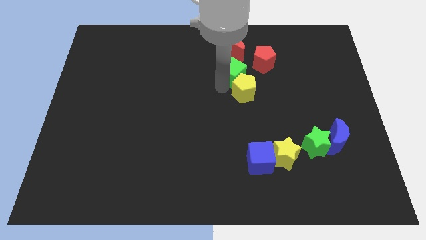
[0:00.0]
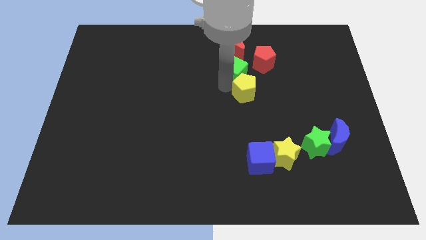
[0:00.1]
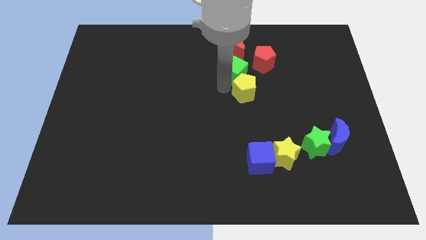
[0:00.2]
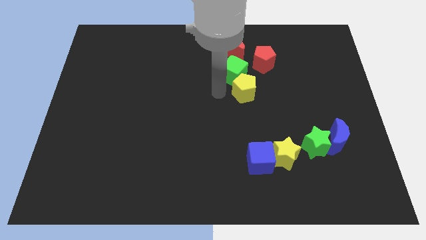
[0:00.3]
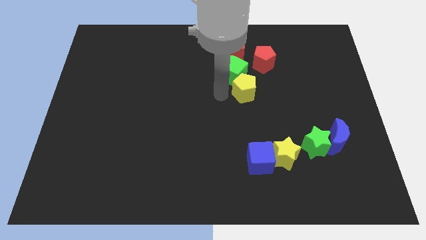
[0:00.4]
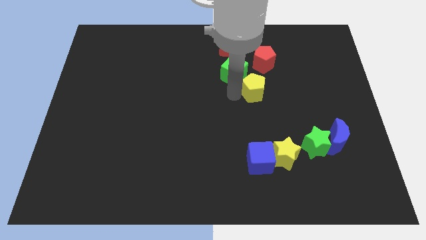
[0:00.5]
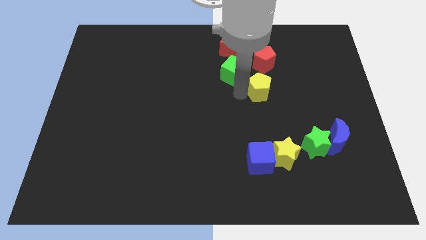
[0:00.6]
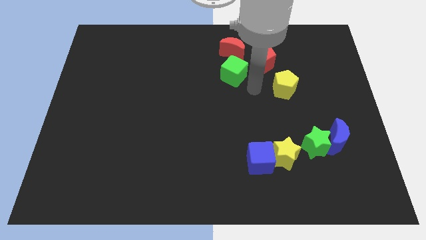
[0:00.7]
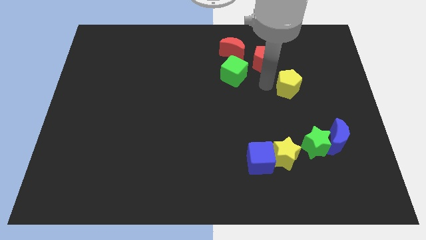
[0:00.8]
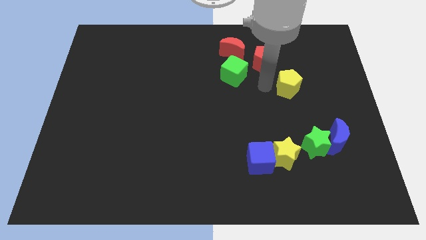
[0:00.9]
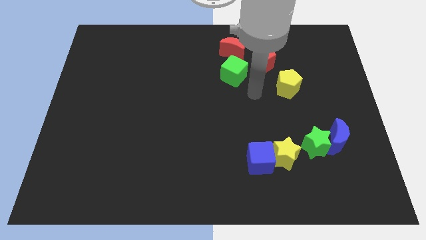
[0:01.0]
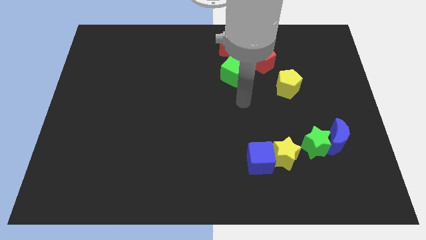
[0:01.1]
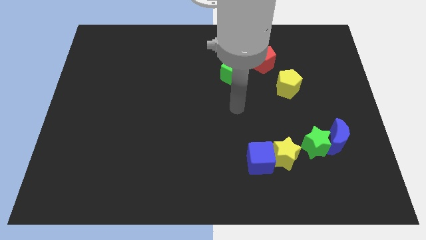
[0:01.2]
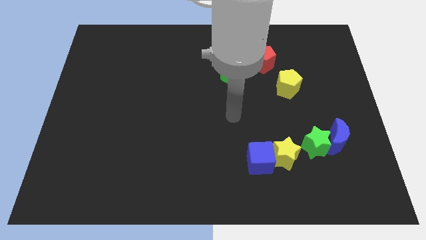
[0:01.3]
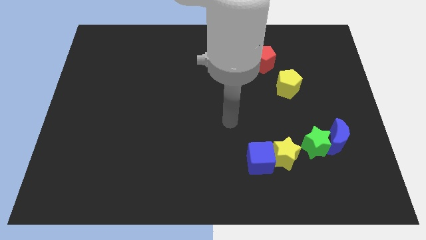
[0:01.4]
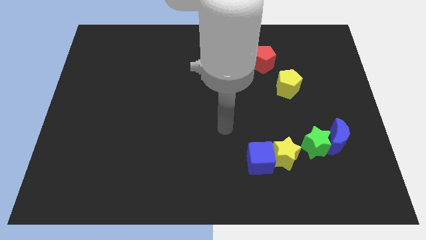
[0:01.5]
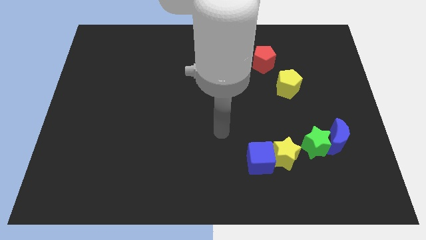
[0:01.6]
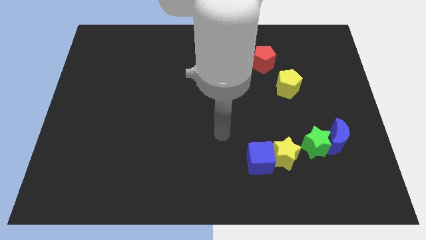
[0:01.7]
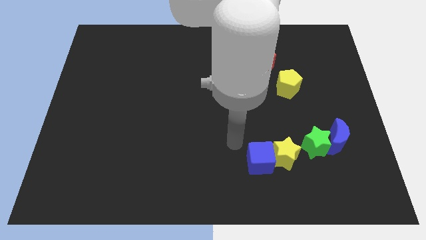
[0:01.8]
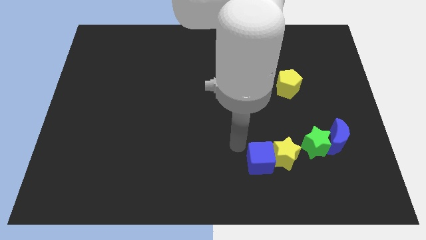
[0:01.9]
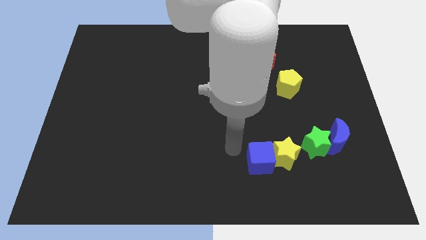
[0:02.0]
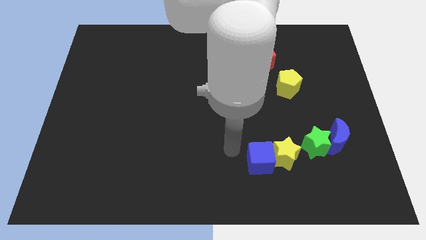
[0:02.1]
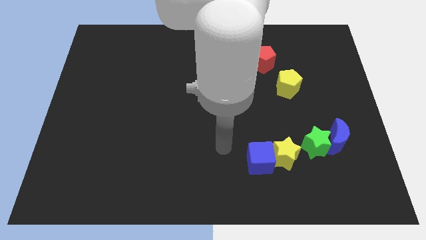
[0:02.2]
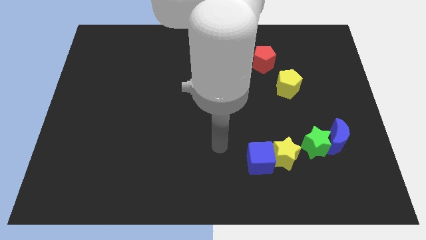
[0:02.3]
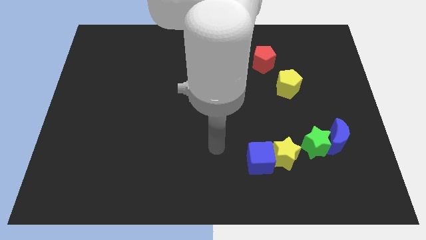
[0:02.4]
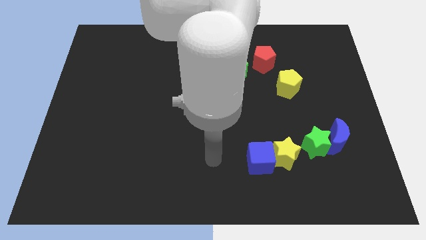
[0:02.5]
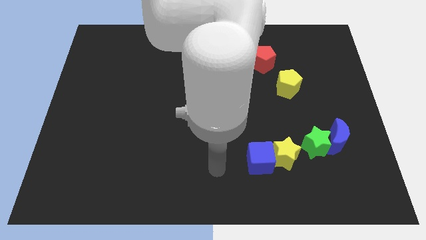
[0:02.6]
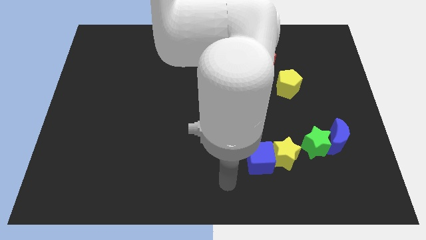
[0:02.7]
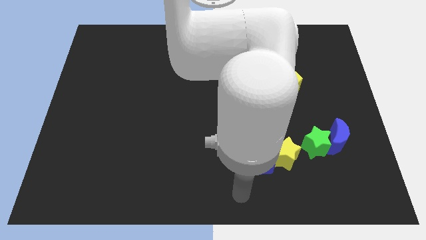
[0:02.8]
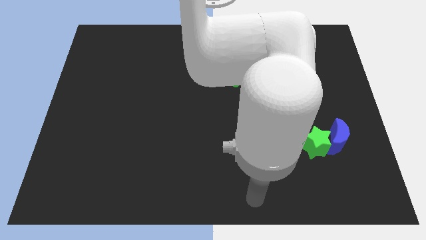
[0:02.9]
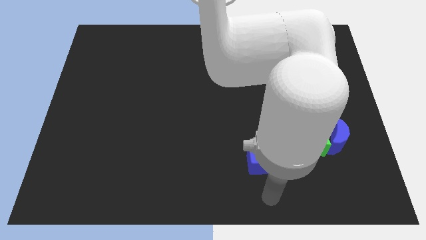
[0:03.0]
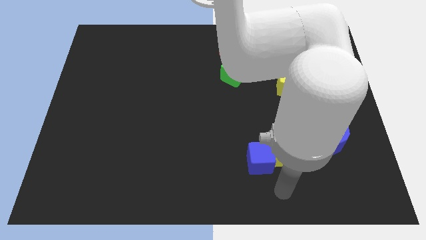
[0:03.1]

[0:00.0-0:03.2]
separate the yellow pentagon from the green cube

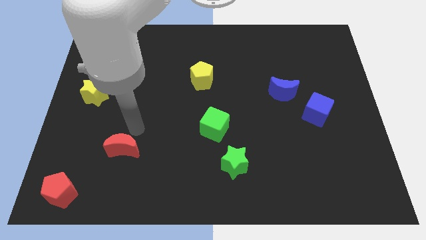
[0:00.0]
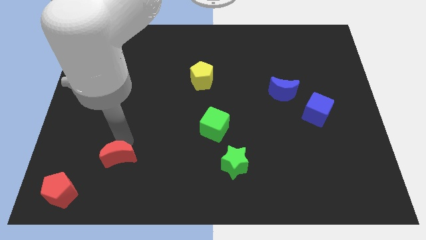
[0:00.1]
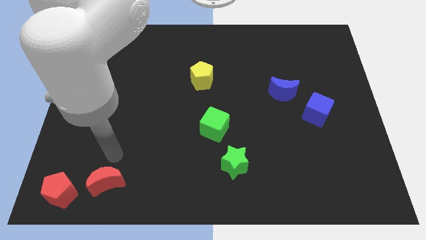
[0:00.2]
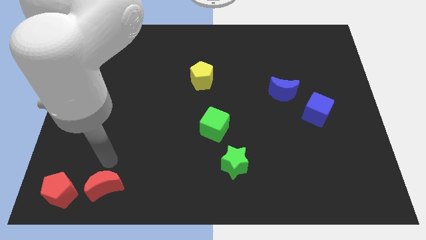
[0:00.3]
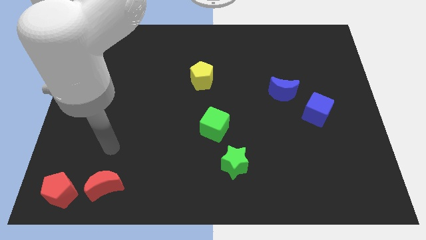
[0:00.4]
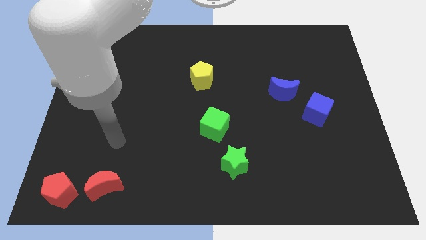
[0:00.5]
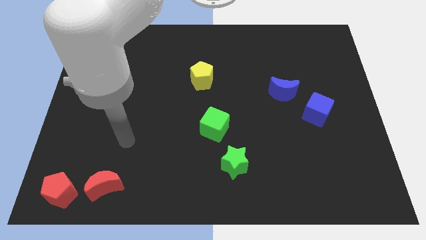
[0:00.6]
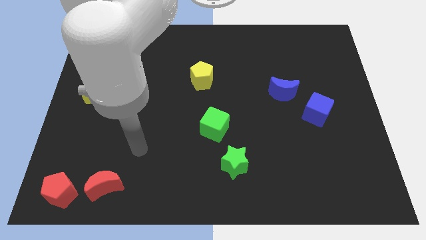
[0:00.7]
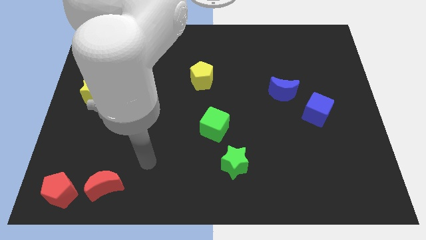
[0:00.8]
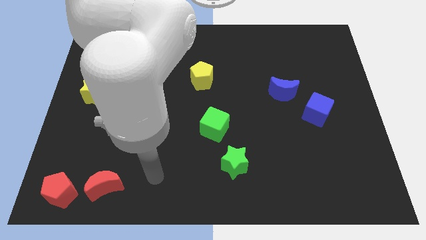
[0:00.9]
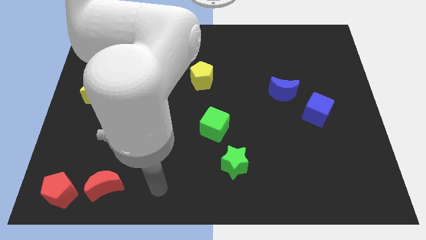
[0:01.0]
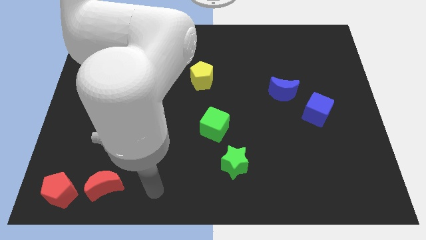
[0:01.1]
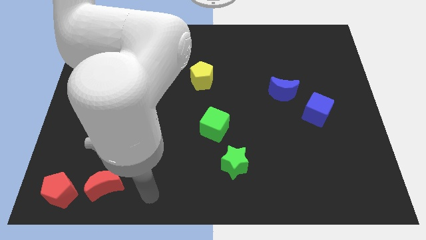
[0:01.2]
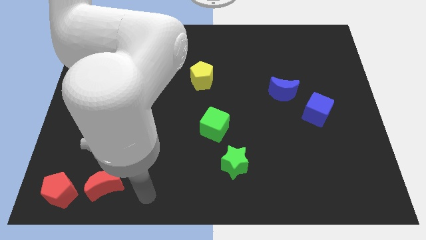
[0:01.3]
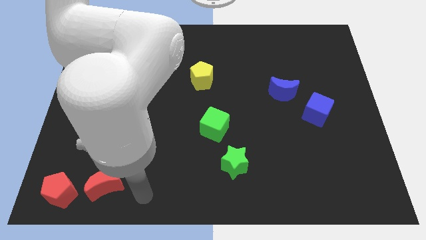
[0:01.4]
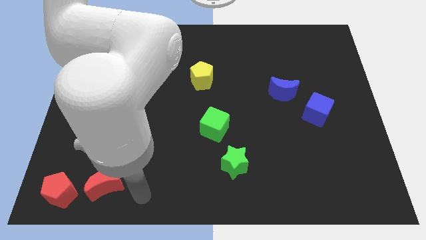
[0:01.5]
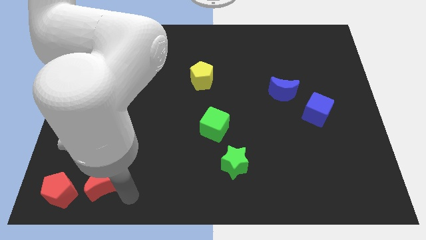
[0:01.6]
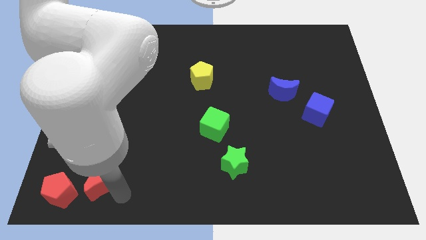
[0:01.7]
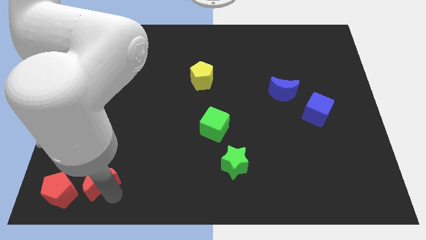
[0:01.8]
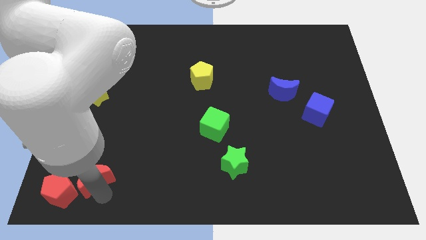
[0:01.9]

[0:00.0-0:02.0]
put the red objects together at the bottom left side of the board

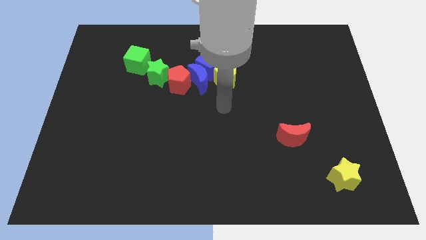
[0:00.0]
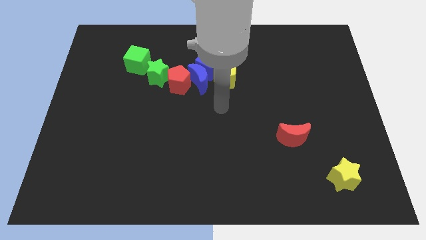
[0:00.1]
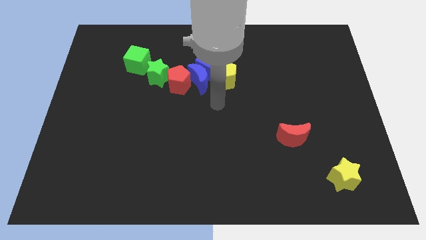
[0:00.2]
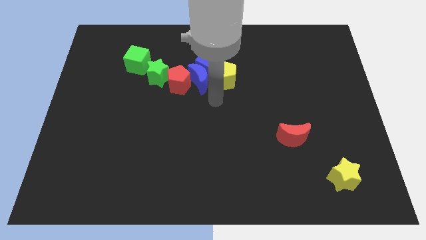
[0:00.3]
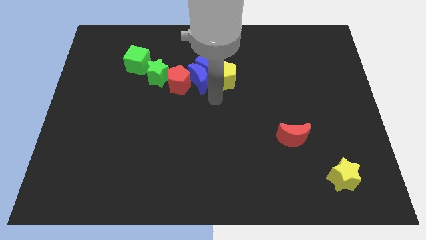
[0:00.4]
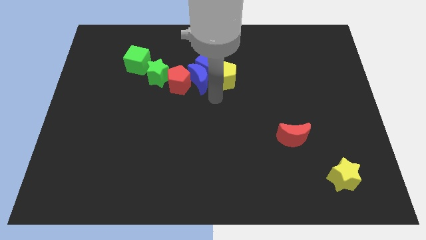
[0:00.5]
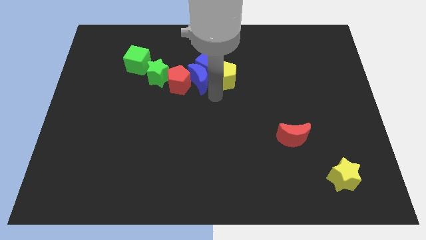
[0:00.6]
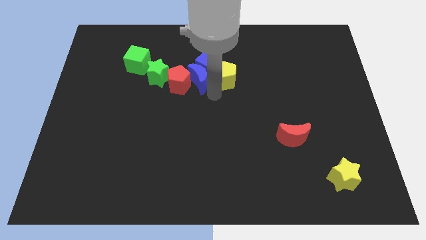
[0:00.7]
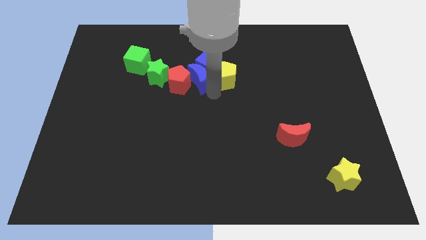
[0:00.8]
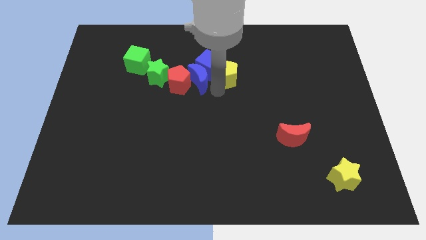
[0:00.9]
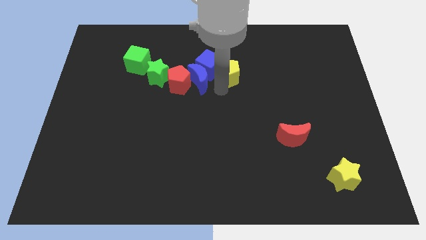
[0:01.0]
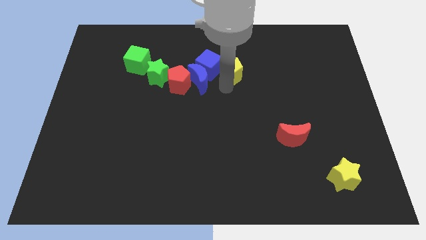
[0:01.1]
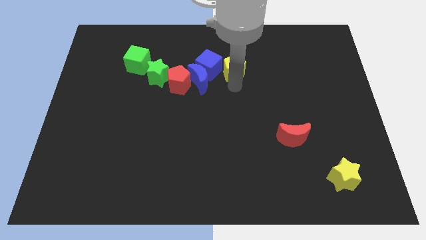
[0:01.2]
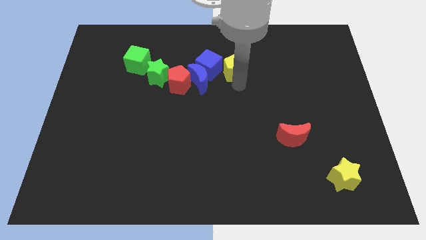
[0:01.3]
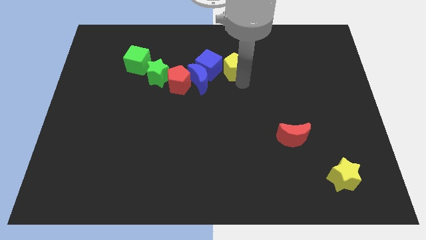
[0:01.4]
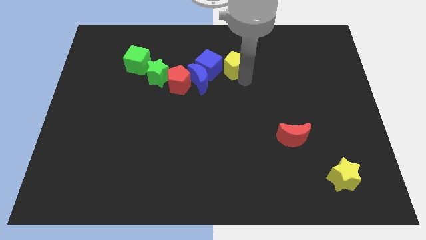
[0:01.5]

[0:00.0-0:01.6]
place the yellow pentagon at the right side of the blue cube

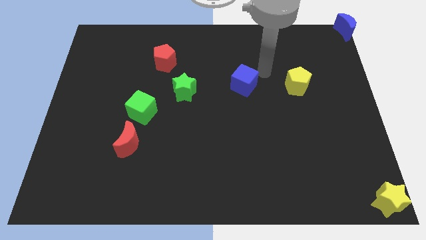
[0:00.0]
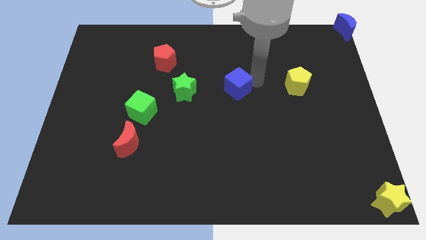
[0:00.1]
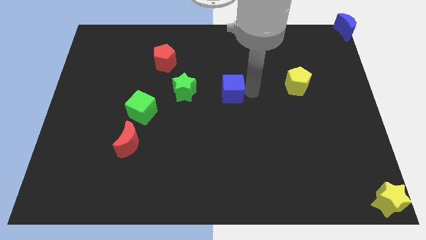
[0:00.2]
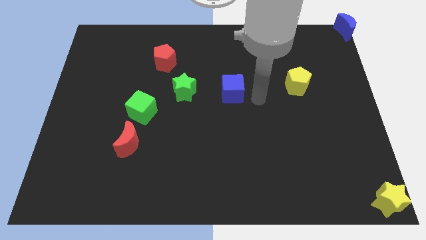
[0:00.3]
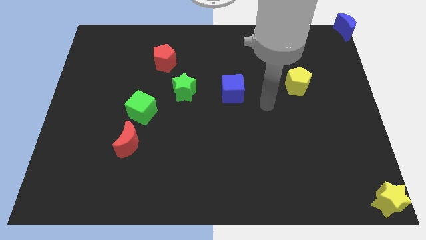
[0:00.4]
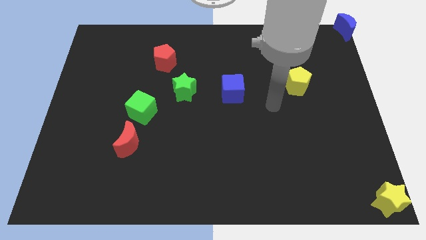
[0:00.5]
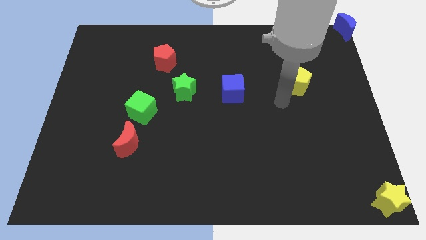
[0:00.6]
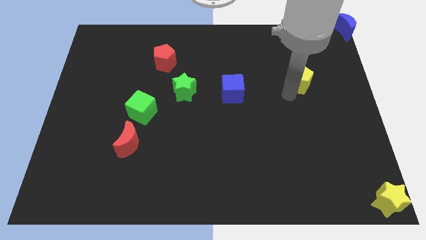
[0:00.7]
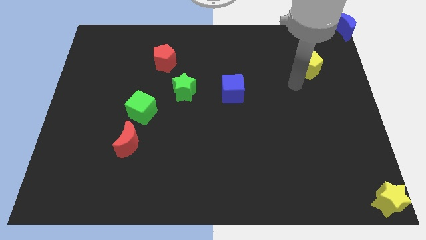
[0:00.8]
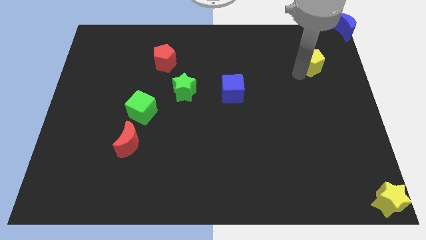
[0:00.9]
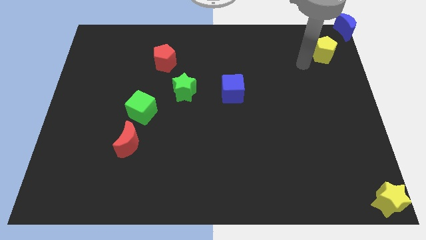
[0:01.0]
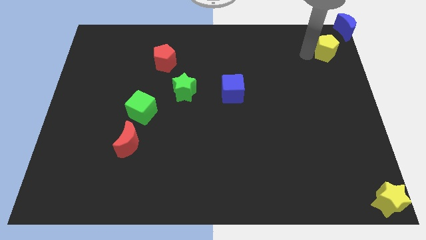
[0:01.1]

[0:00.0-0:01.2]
move the yellow pentagon close to the blue crescent

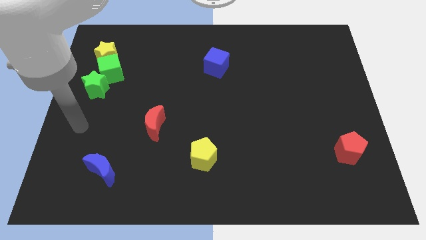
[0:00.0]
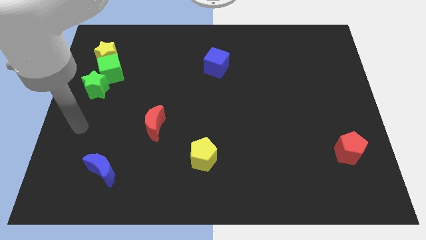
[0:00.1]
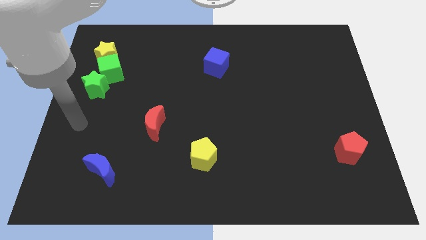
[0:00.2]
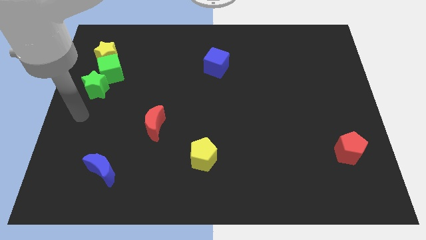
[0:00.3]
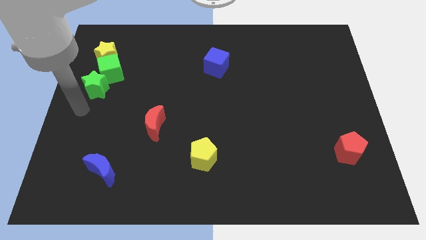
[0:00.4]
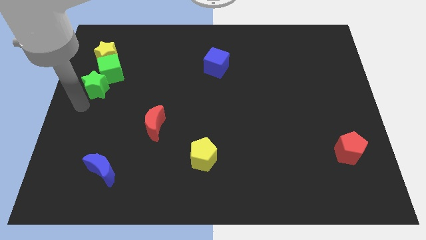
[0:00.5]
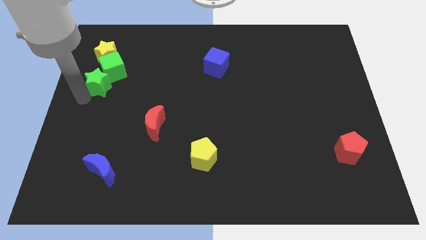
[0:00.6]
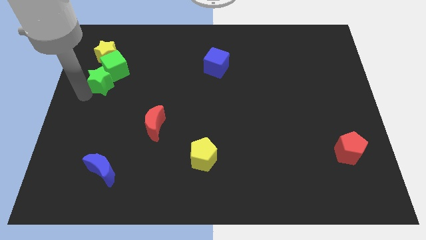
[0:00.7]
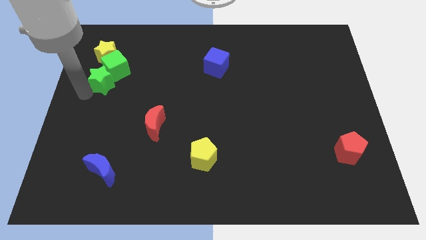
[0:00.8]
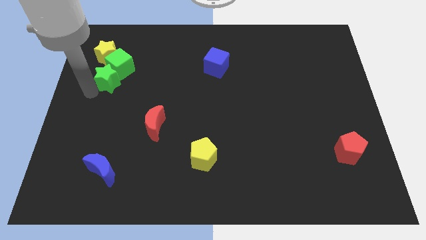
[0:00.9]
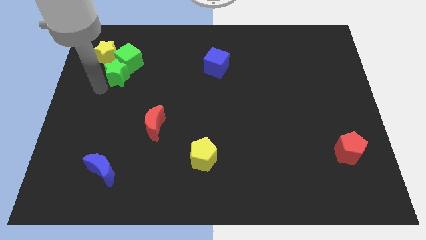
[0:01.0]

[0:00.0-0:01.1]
push green star into the green cube
